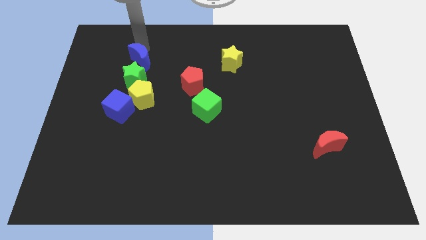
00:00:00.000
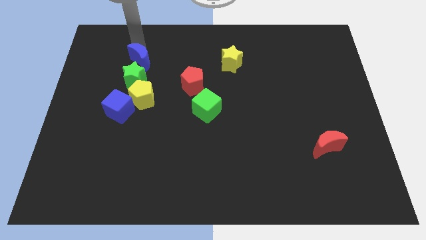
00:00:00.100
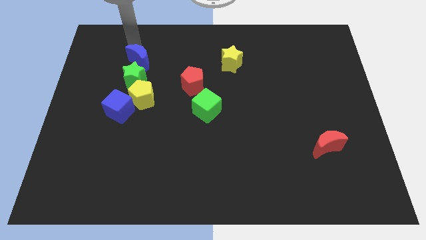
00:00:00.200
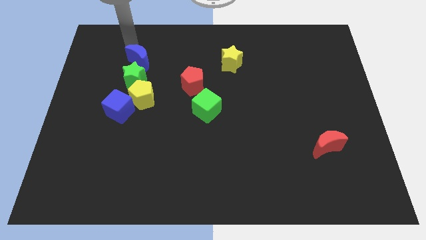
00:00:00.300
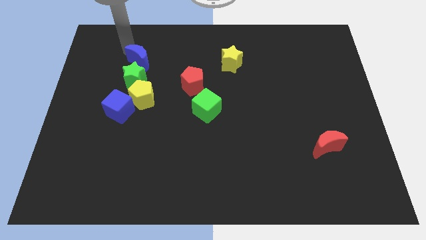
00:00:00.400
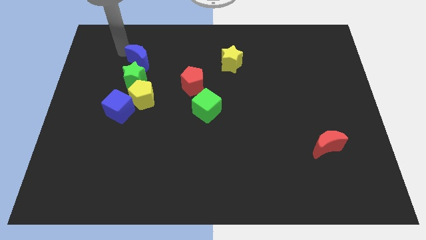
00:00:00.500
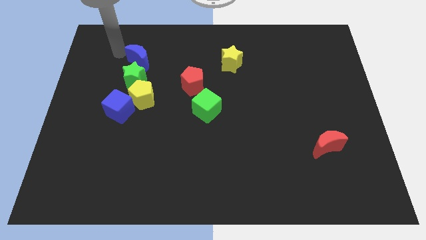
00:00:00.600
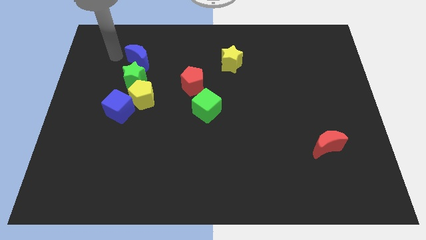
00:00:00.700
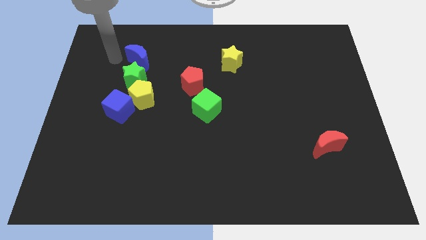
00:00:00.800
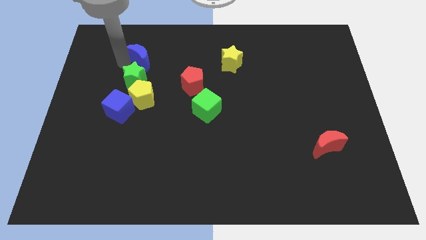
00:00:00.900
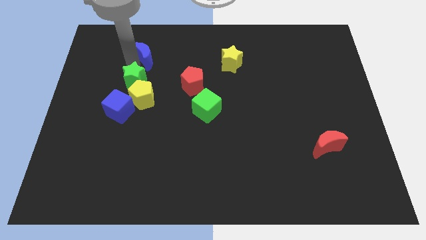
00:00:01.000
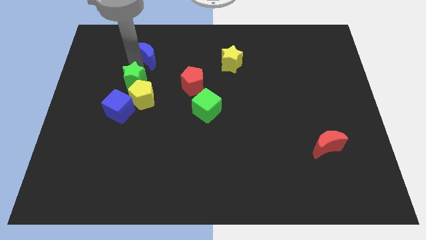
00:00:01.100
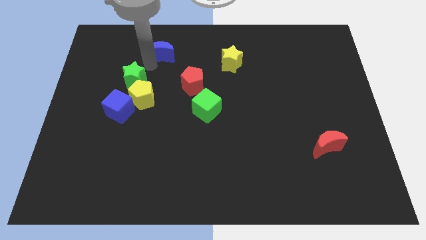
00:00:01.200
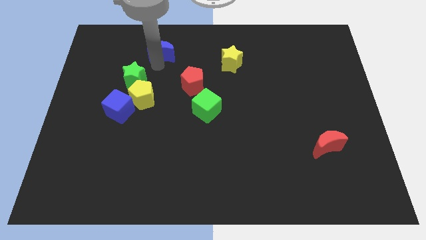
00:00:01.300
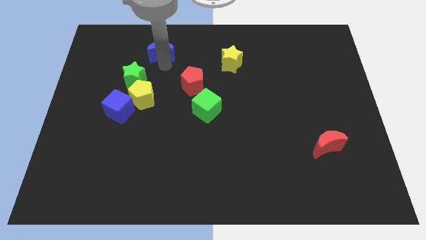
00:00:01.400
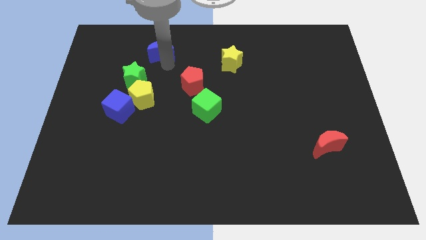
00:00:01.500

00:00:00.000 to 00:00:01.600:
slightly move the blue moon towards the right

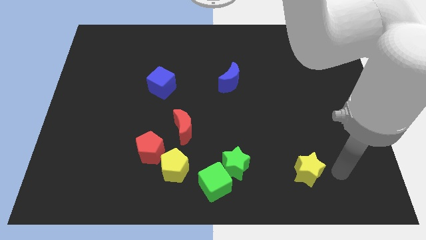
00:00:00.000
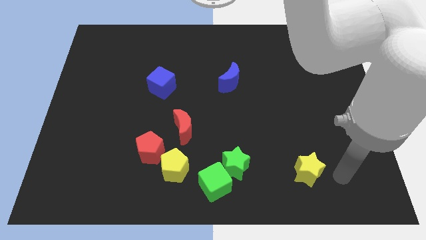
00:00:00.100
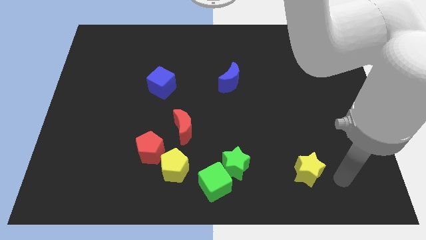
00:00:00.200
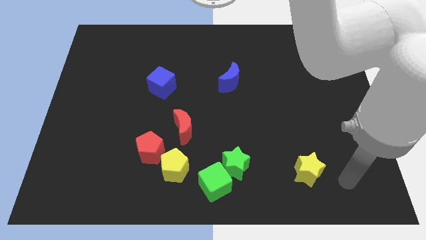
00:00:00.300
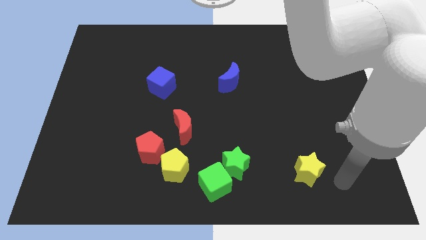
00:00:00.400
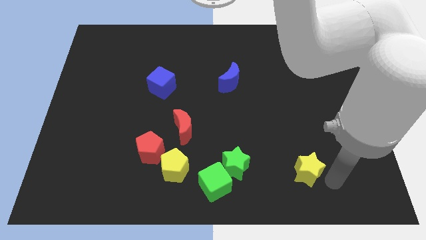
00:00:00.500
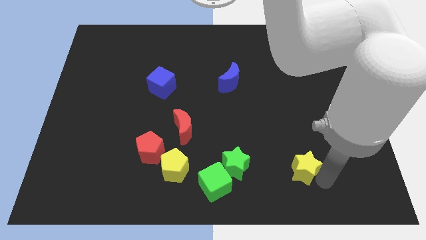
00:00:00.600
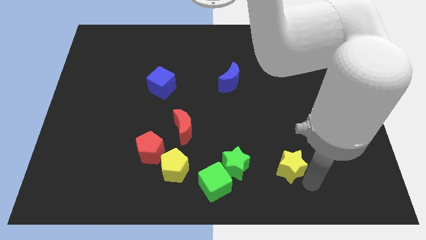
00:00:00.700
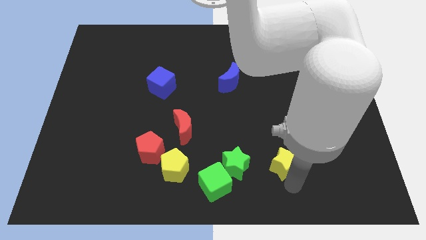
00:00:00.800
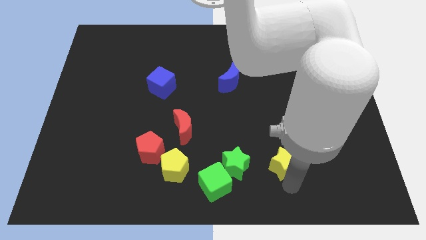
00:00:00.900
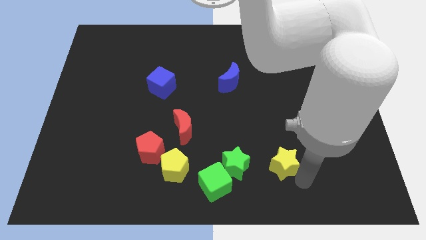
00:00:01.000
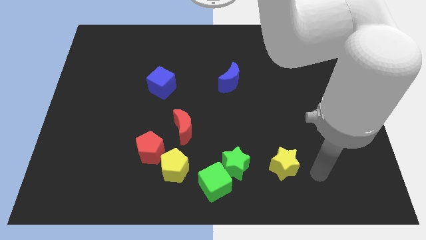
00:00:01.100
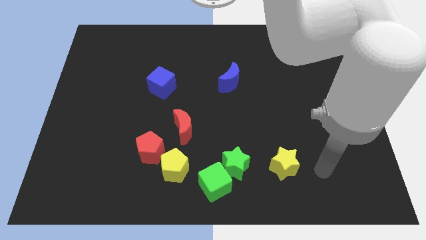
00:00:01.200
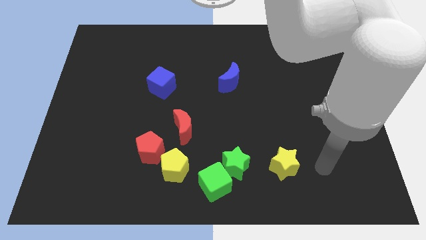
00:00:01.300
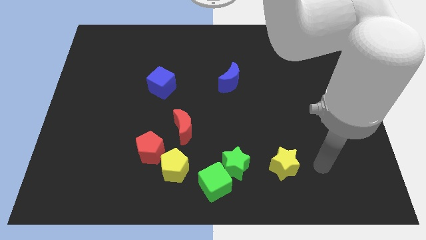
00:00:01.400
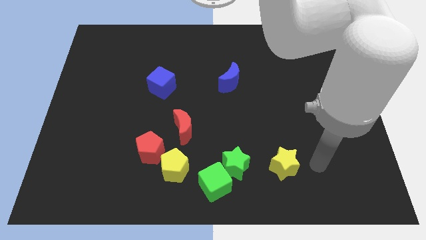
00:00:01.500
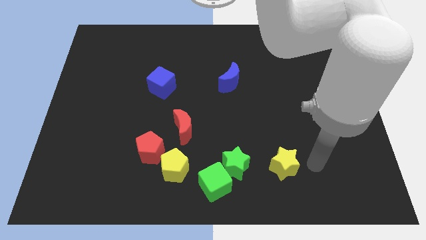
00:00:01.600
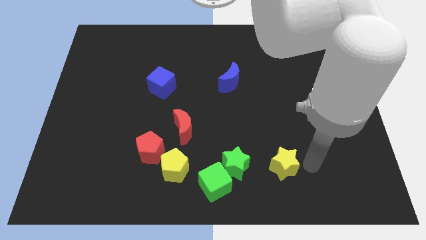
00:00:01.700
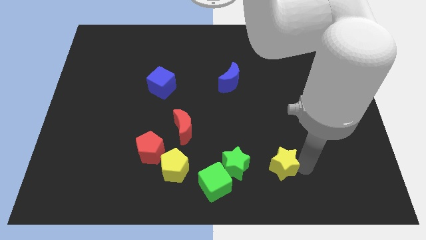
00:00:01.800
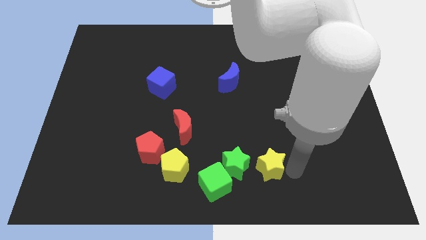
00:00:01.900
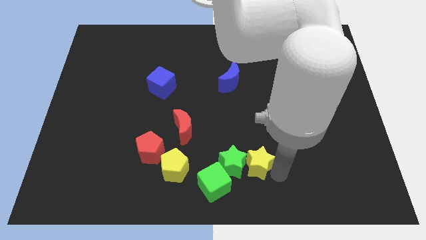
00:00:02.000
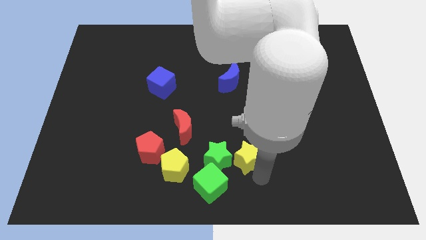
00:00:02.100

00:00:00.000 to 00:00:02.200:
place the yellow star to the right of green star

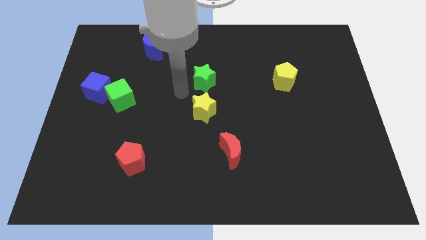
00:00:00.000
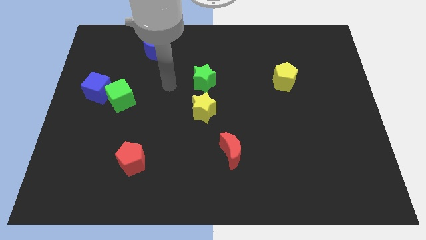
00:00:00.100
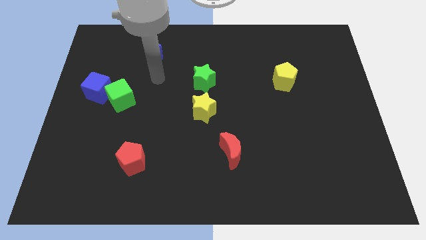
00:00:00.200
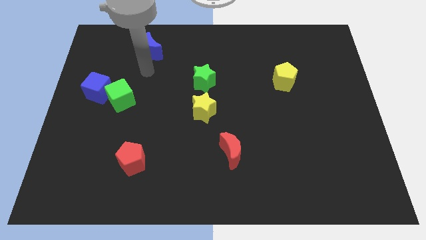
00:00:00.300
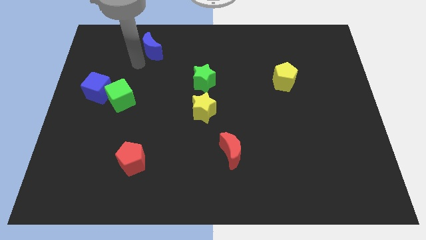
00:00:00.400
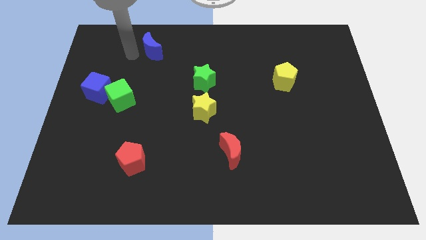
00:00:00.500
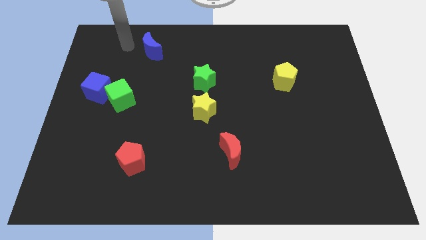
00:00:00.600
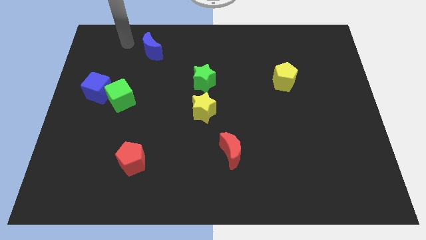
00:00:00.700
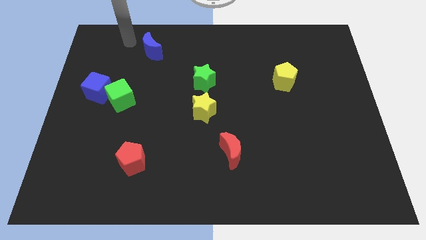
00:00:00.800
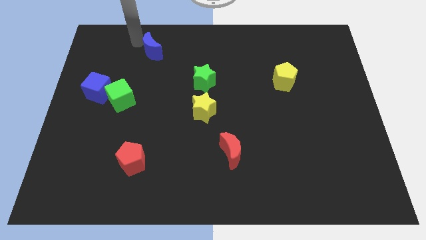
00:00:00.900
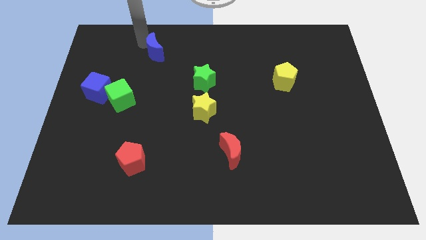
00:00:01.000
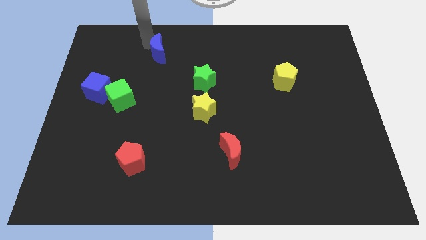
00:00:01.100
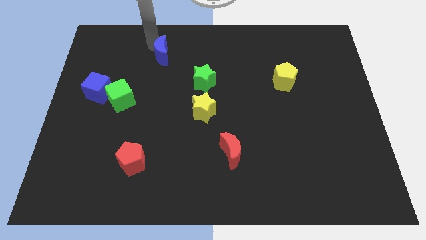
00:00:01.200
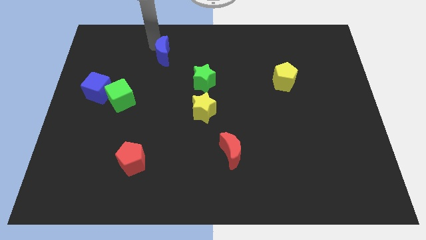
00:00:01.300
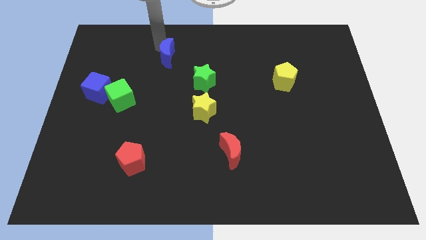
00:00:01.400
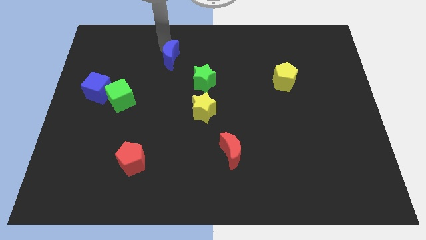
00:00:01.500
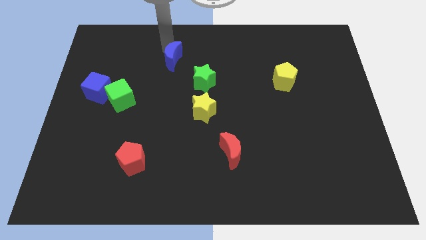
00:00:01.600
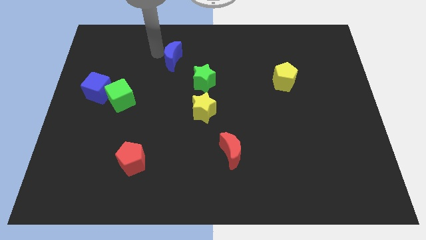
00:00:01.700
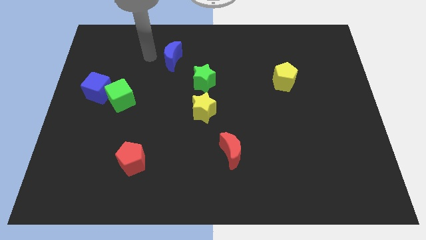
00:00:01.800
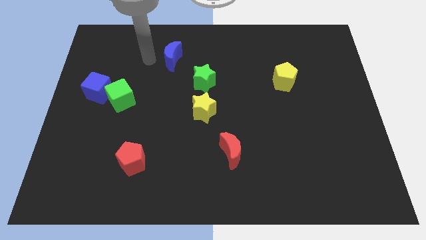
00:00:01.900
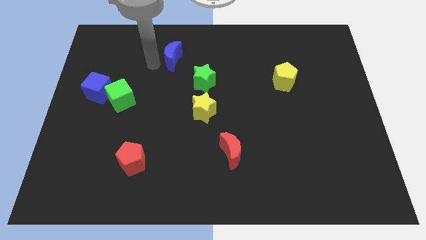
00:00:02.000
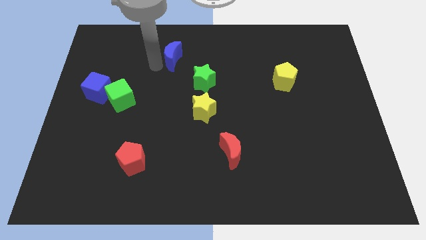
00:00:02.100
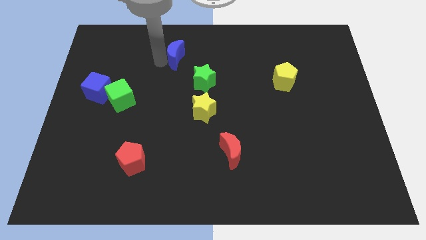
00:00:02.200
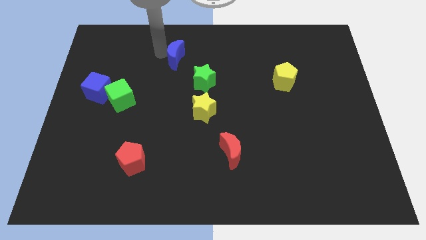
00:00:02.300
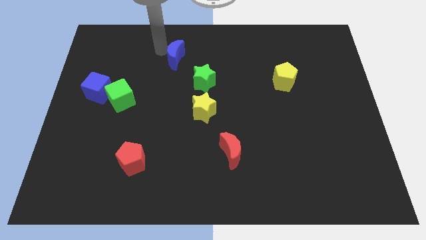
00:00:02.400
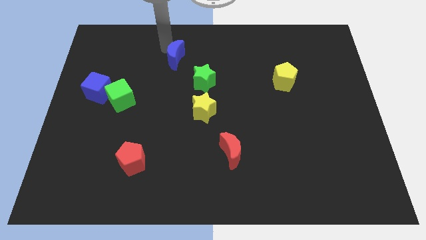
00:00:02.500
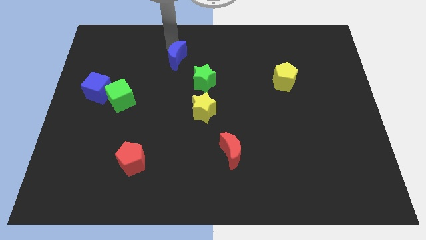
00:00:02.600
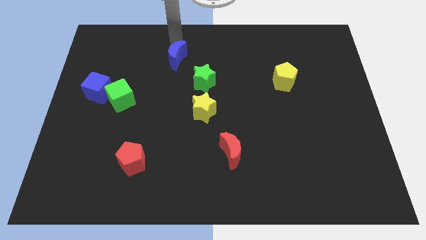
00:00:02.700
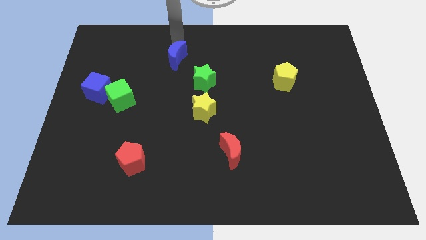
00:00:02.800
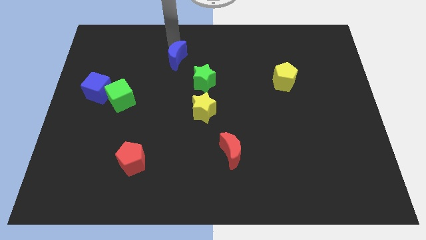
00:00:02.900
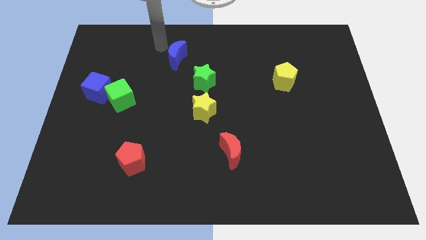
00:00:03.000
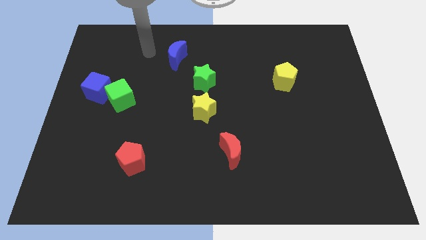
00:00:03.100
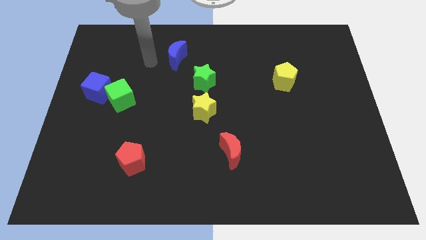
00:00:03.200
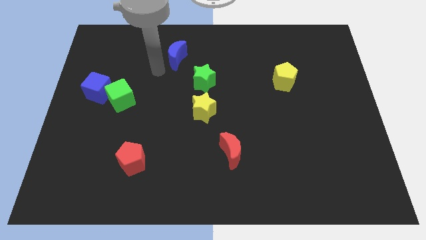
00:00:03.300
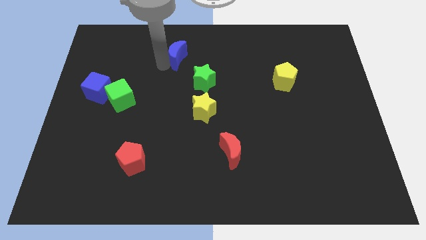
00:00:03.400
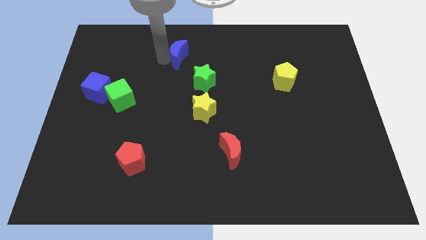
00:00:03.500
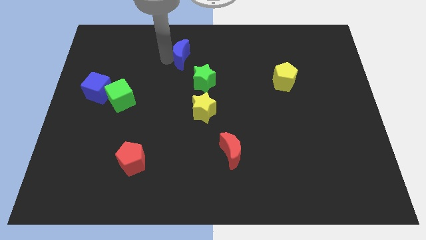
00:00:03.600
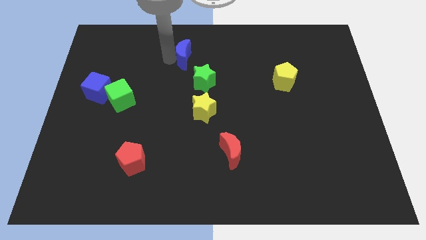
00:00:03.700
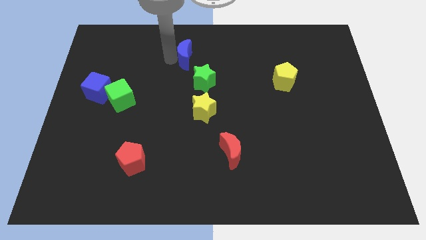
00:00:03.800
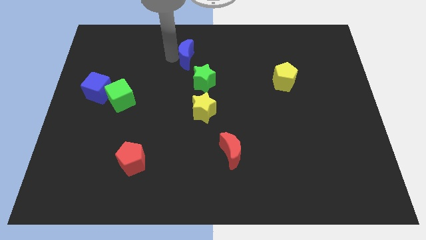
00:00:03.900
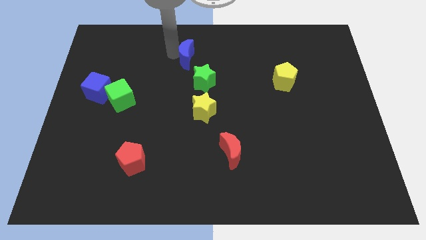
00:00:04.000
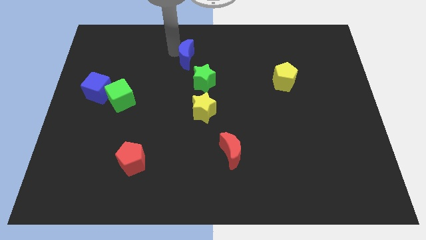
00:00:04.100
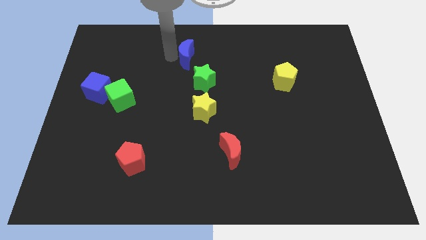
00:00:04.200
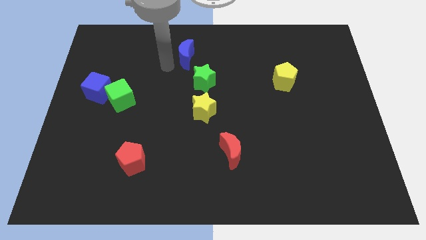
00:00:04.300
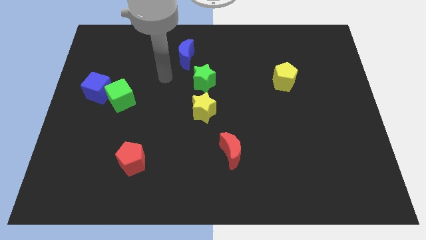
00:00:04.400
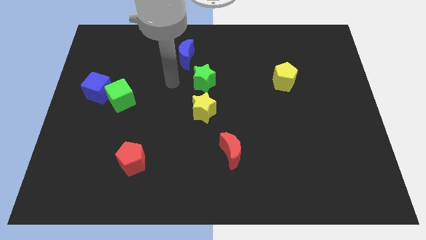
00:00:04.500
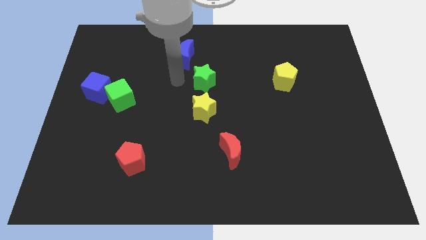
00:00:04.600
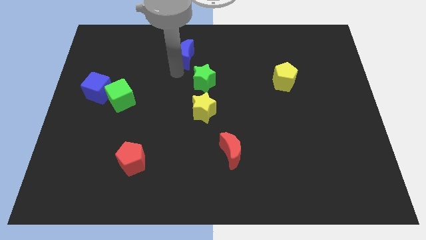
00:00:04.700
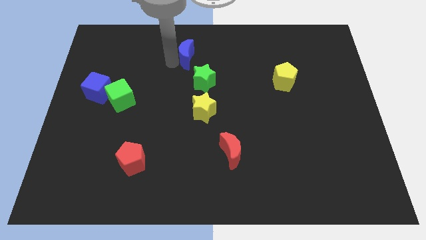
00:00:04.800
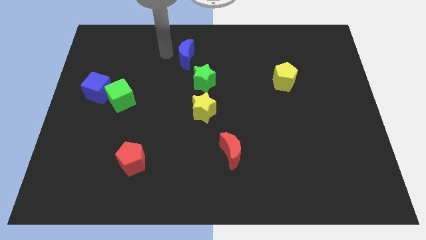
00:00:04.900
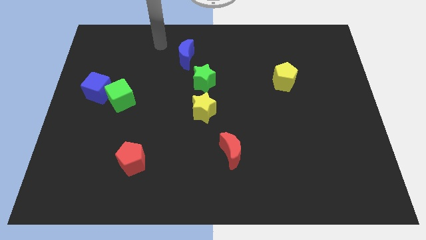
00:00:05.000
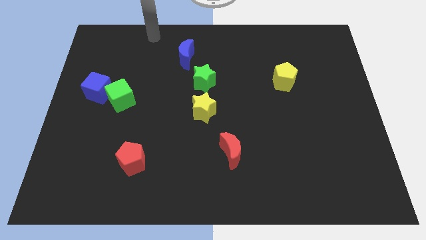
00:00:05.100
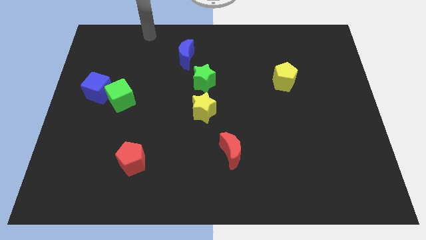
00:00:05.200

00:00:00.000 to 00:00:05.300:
move the blue crescent to the top left side of the green star
